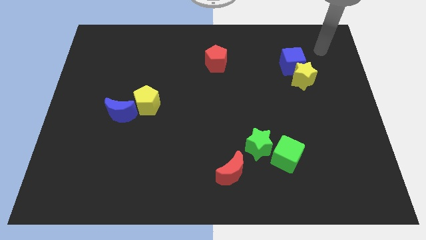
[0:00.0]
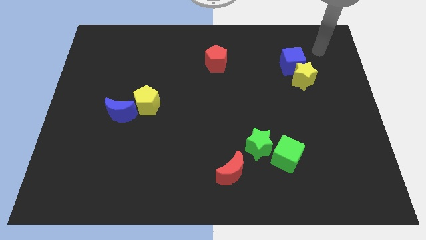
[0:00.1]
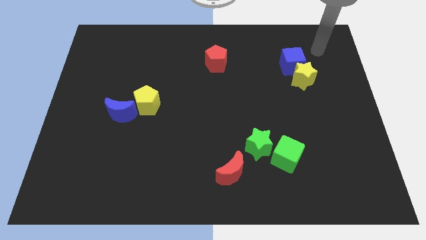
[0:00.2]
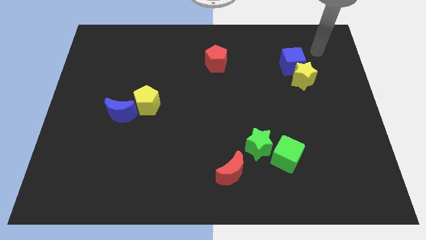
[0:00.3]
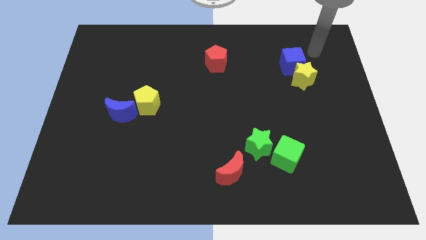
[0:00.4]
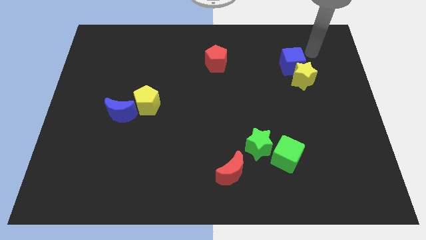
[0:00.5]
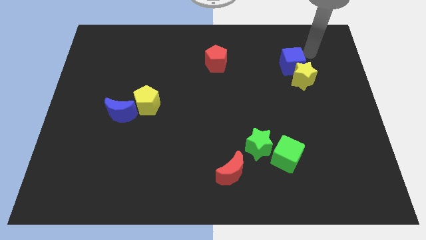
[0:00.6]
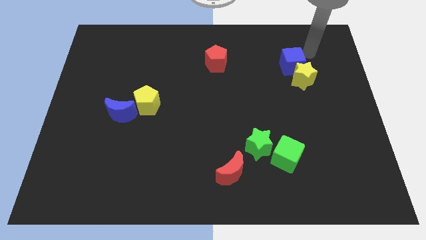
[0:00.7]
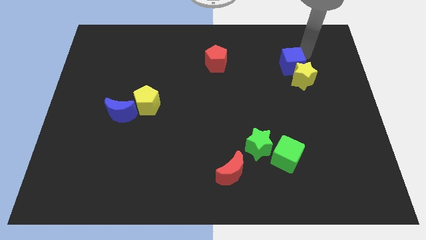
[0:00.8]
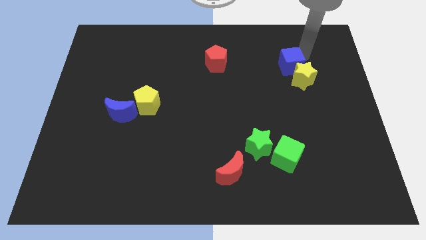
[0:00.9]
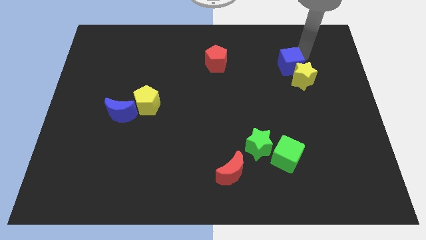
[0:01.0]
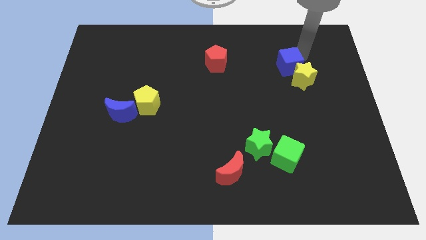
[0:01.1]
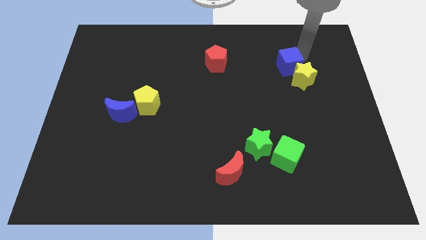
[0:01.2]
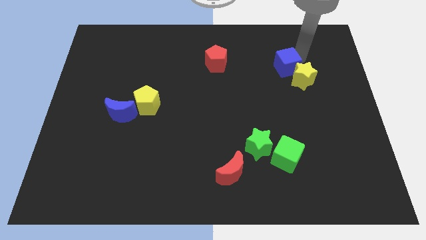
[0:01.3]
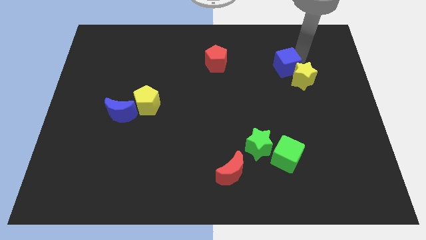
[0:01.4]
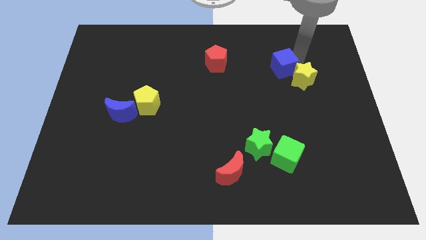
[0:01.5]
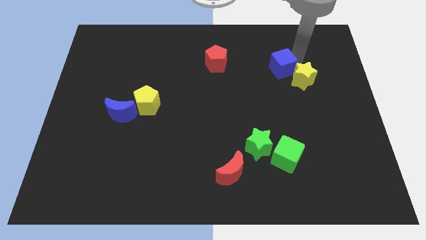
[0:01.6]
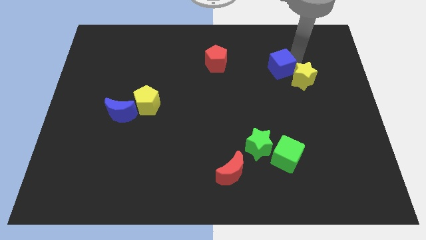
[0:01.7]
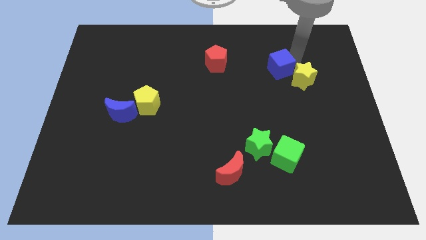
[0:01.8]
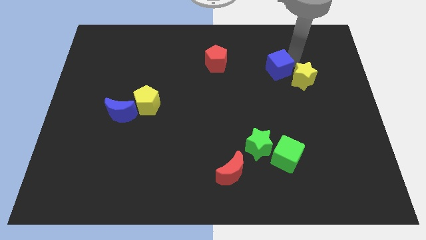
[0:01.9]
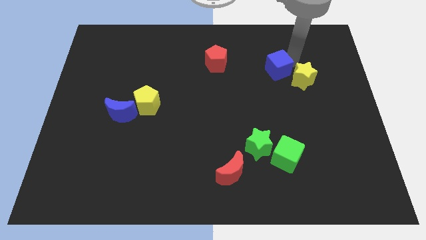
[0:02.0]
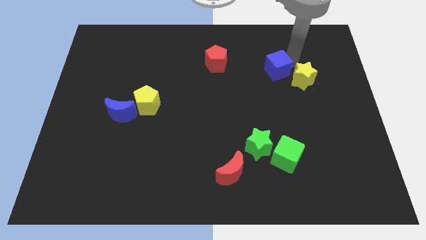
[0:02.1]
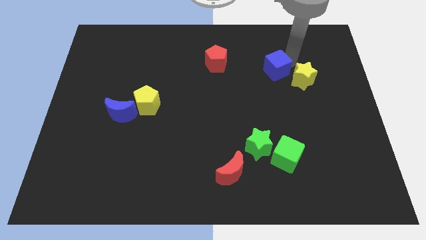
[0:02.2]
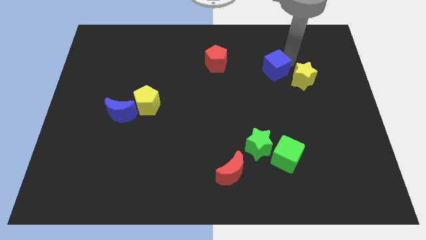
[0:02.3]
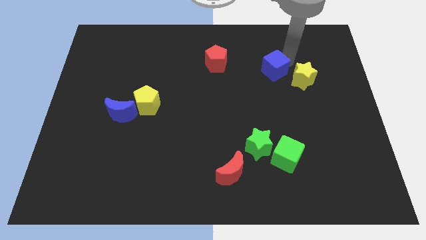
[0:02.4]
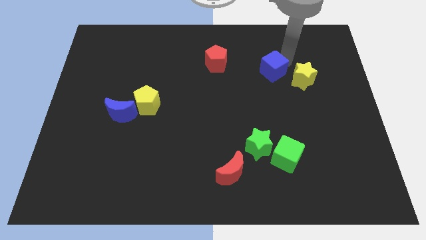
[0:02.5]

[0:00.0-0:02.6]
separate the blue cube from the yellow star

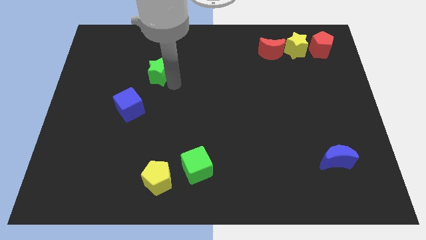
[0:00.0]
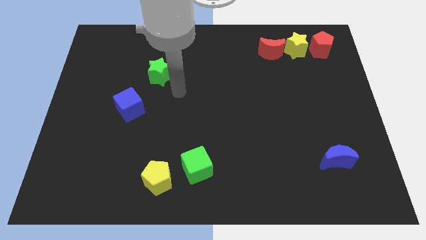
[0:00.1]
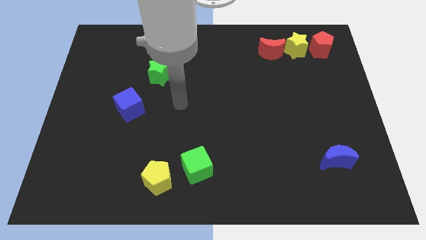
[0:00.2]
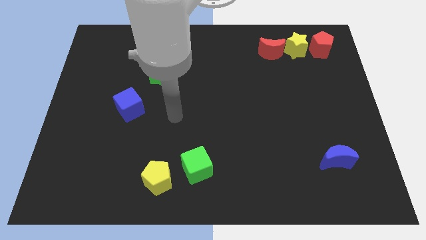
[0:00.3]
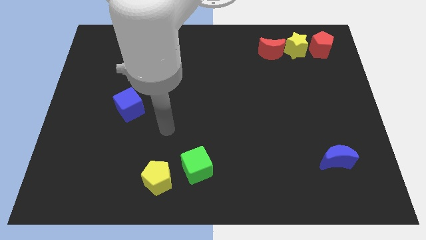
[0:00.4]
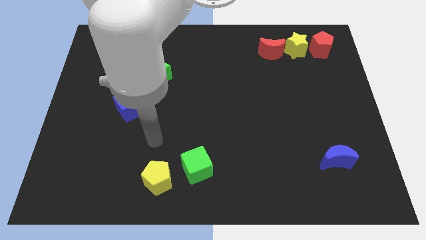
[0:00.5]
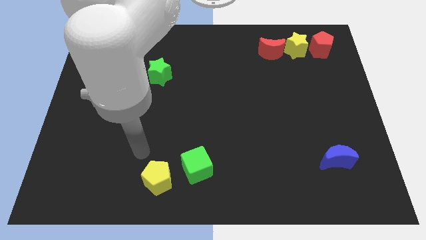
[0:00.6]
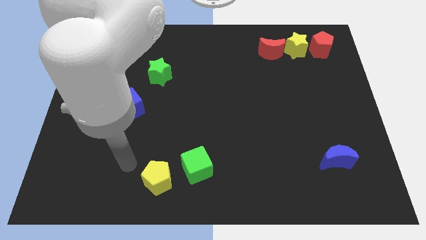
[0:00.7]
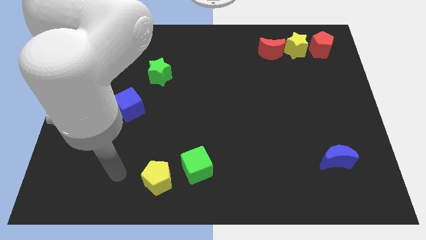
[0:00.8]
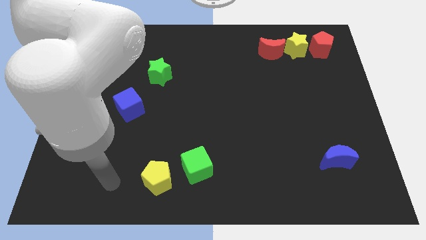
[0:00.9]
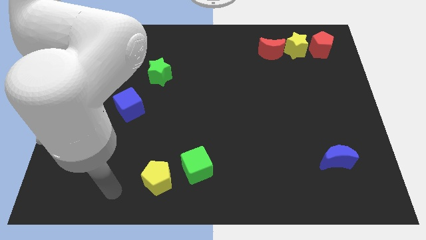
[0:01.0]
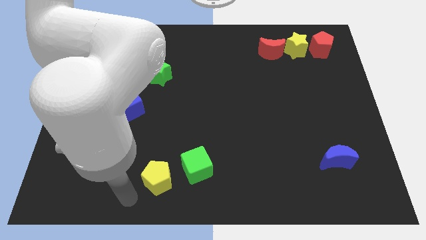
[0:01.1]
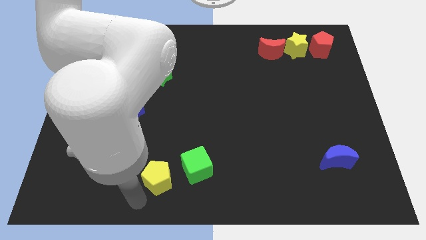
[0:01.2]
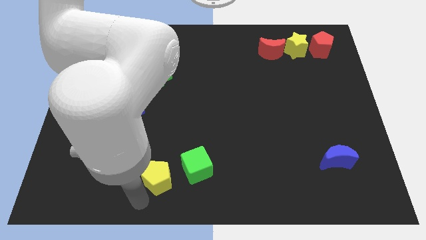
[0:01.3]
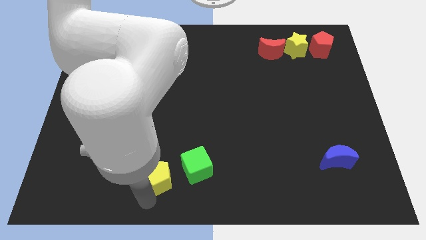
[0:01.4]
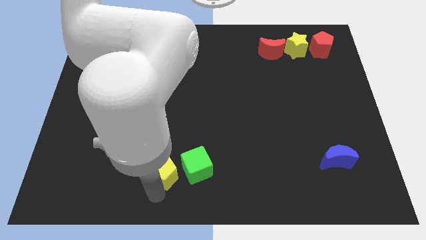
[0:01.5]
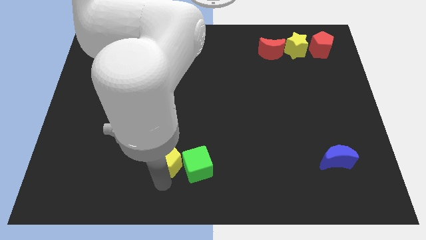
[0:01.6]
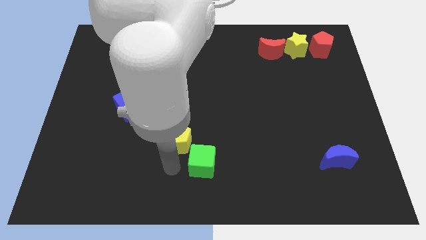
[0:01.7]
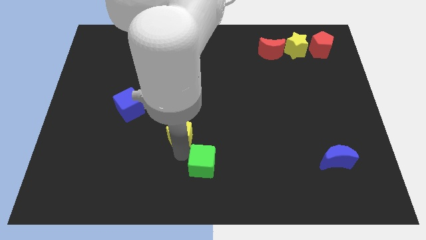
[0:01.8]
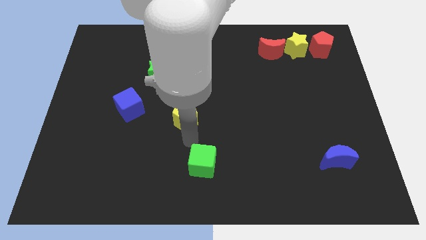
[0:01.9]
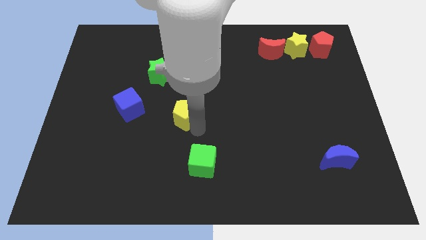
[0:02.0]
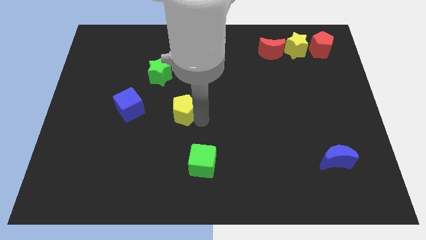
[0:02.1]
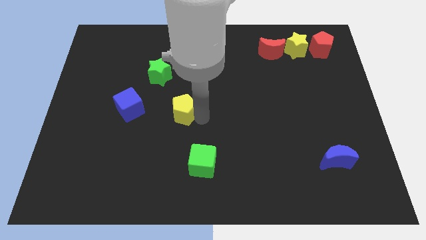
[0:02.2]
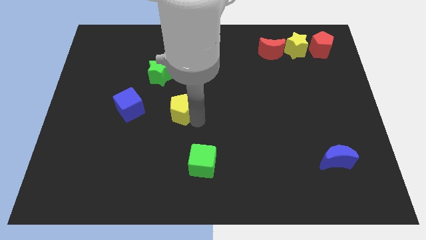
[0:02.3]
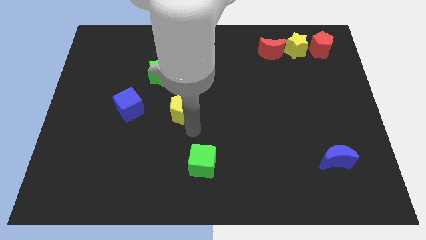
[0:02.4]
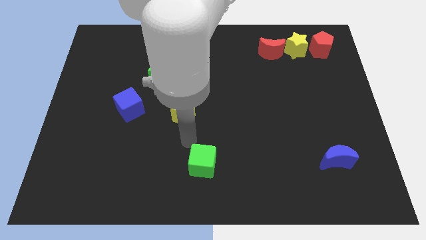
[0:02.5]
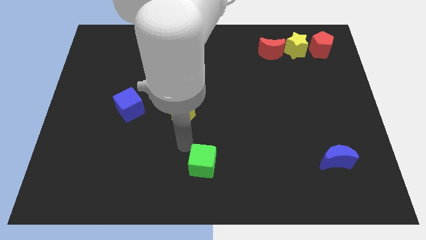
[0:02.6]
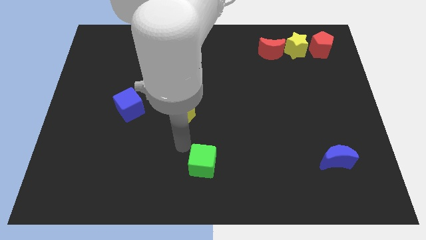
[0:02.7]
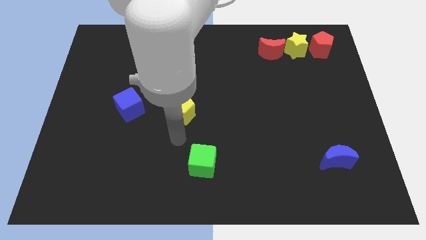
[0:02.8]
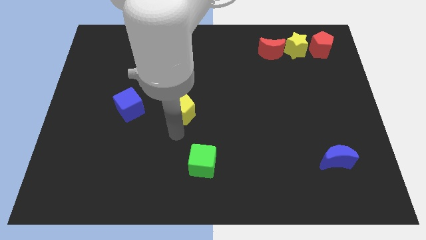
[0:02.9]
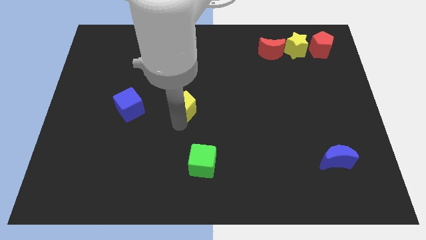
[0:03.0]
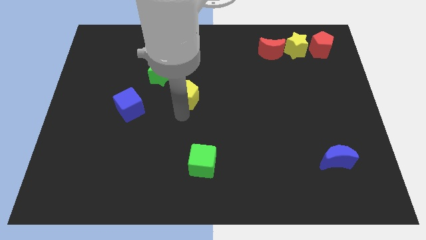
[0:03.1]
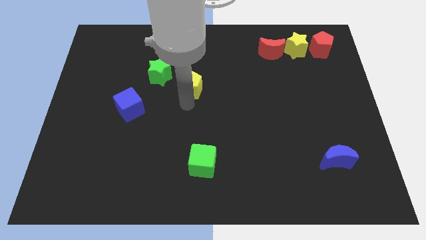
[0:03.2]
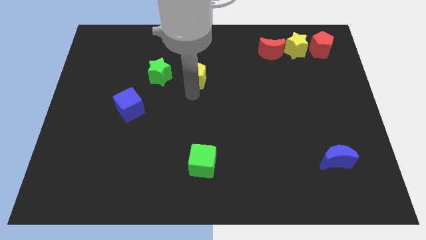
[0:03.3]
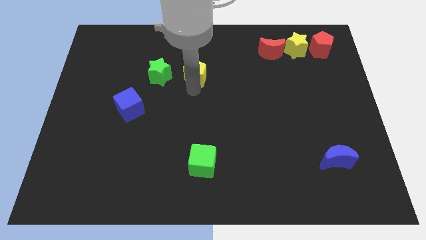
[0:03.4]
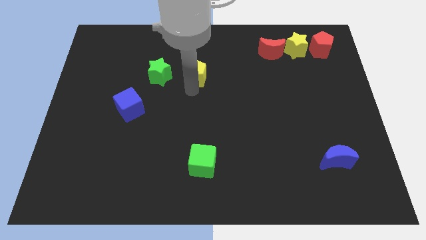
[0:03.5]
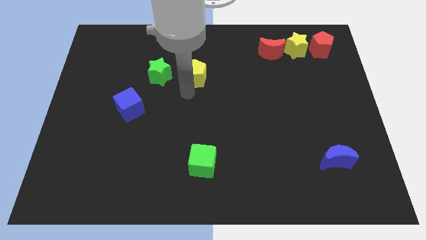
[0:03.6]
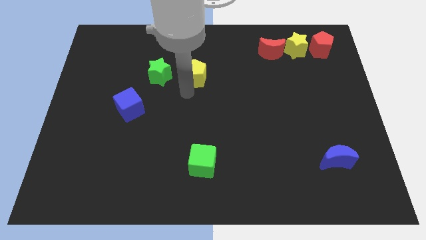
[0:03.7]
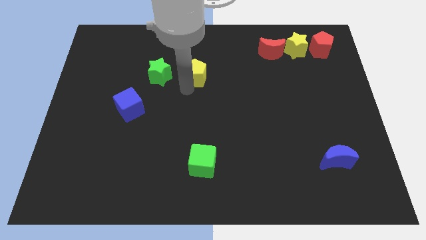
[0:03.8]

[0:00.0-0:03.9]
place the yellow pentagon horizontally at the right side of the green star

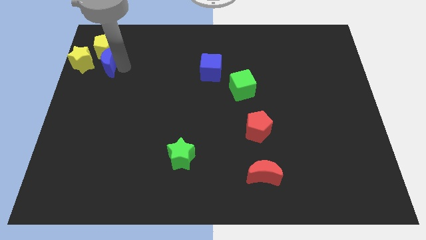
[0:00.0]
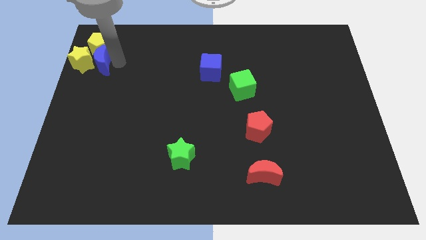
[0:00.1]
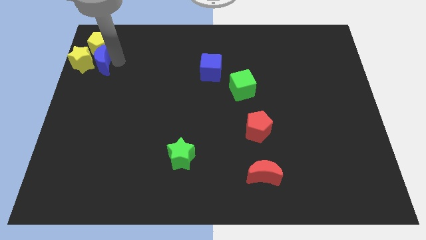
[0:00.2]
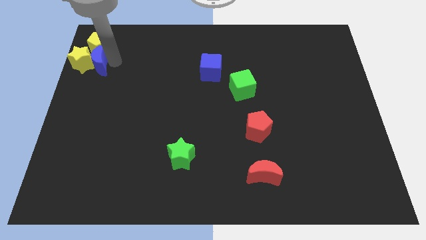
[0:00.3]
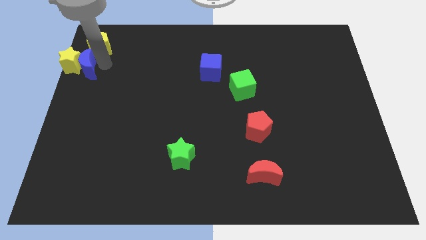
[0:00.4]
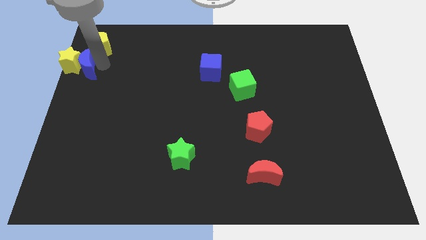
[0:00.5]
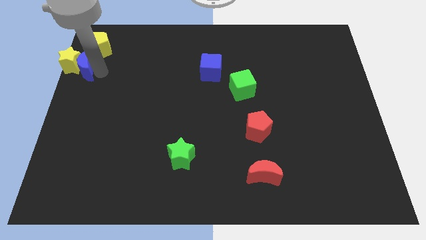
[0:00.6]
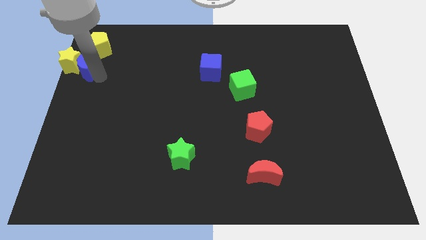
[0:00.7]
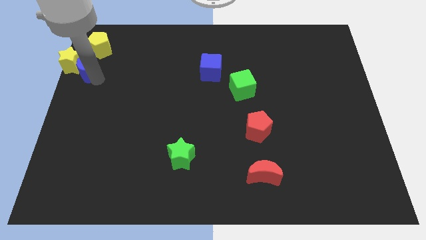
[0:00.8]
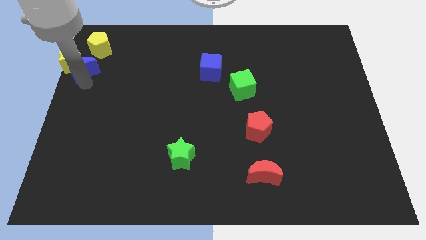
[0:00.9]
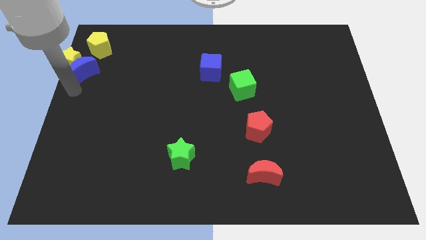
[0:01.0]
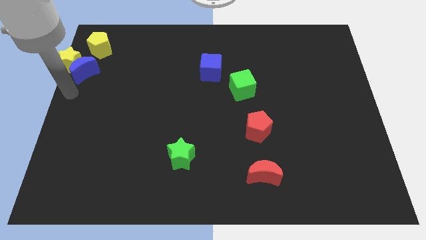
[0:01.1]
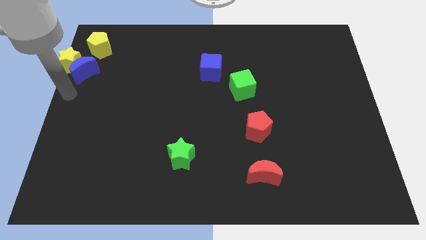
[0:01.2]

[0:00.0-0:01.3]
move blue crescent in to yellow star

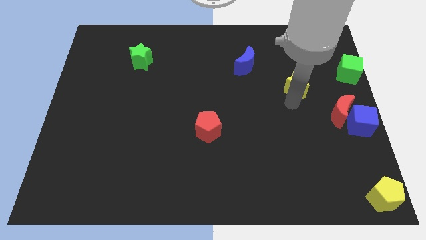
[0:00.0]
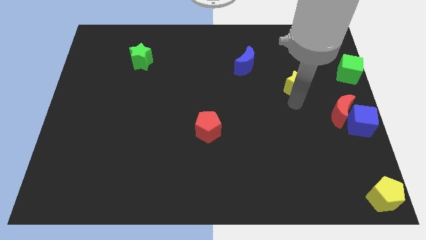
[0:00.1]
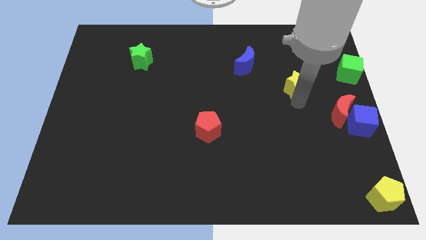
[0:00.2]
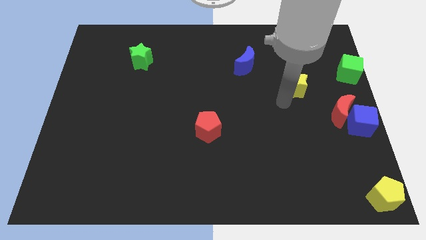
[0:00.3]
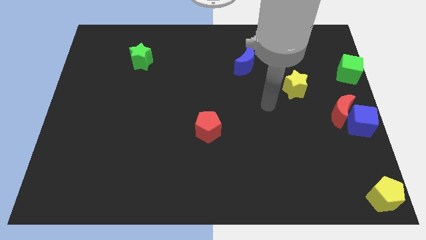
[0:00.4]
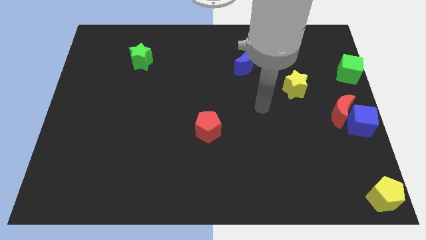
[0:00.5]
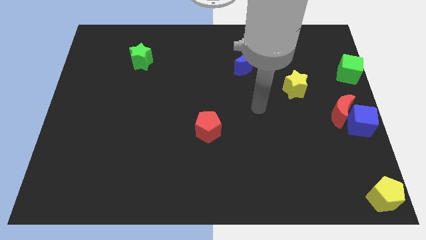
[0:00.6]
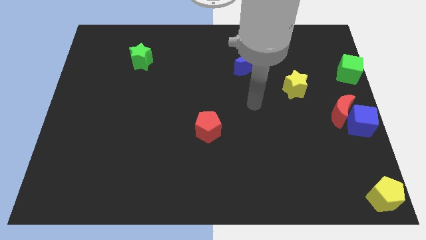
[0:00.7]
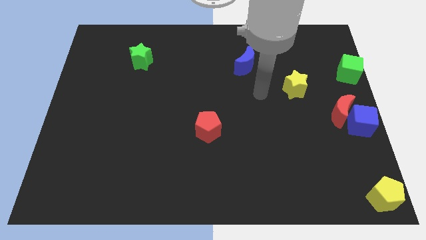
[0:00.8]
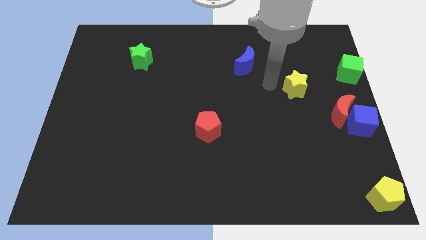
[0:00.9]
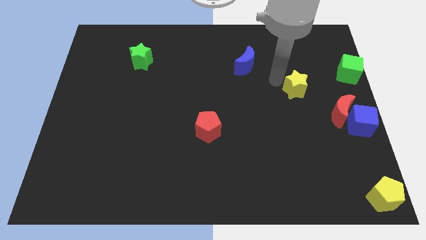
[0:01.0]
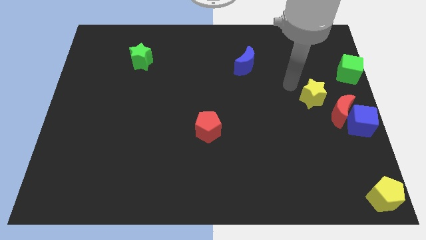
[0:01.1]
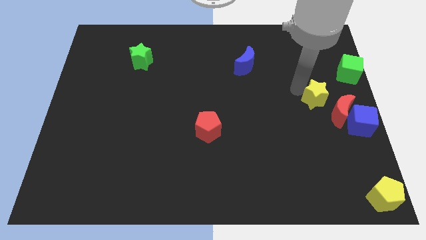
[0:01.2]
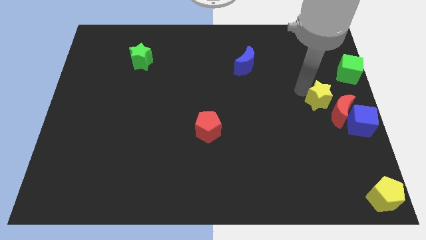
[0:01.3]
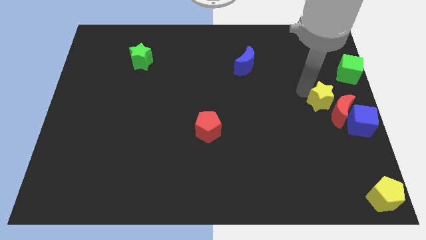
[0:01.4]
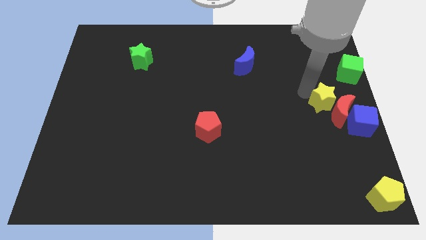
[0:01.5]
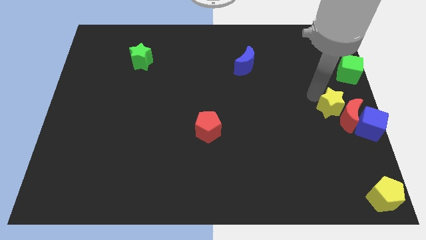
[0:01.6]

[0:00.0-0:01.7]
place the yellow star to the top left of the red moon
